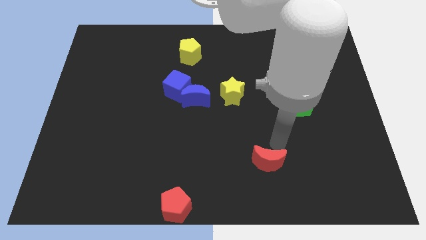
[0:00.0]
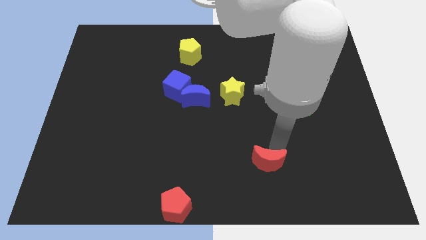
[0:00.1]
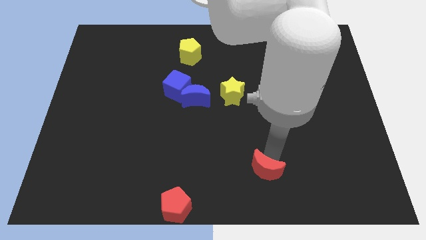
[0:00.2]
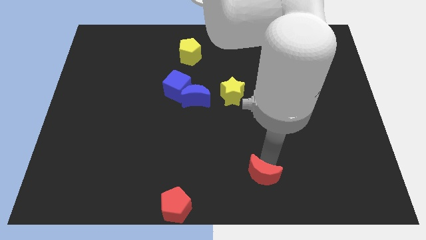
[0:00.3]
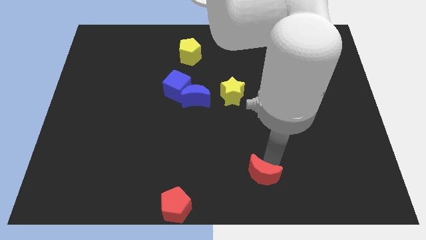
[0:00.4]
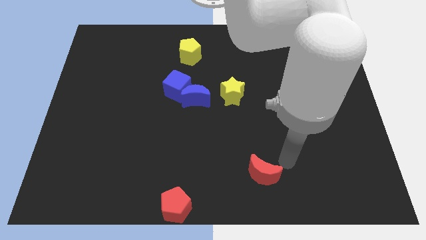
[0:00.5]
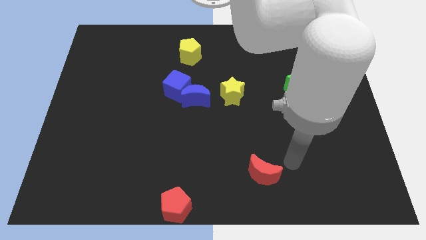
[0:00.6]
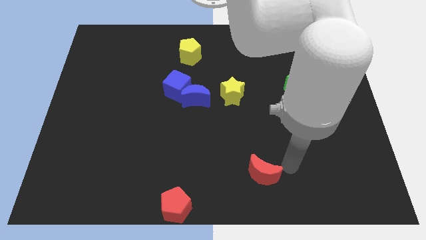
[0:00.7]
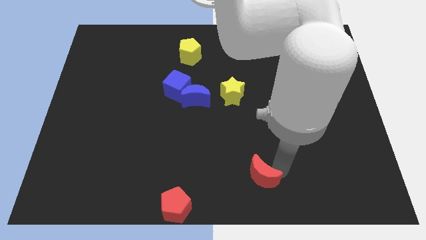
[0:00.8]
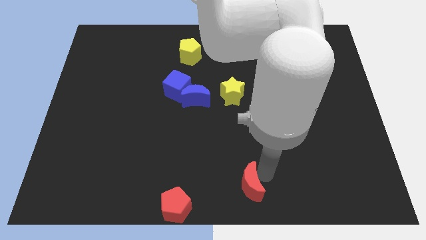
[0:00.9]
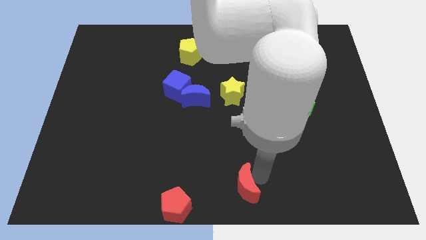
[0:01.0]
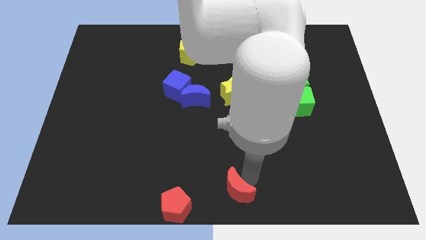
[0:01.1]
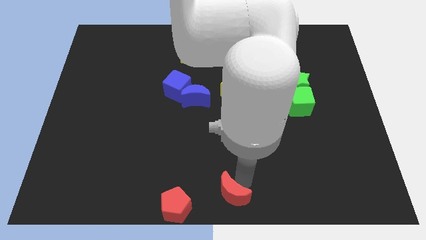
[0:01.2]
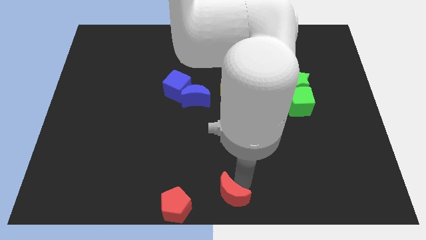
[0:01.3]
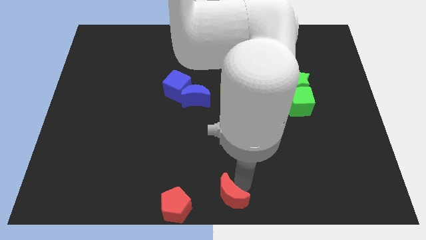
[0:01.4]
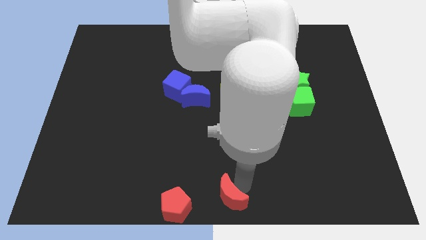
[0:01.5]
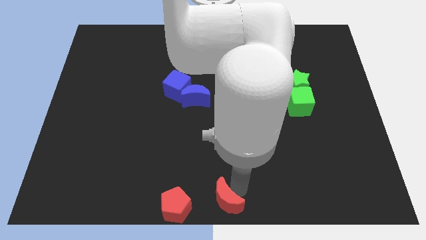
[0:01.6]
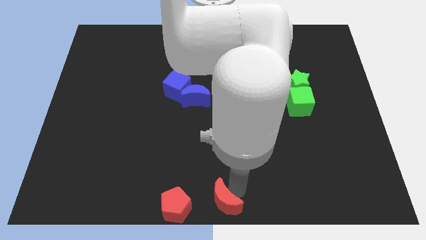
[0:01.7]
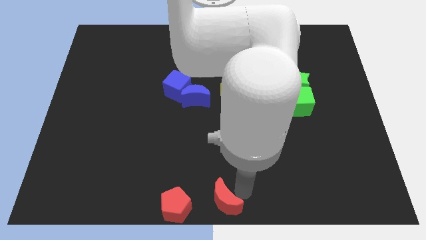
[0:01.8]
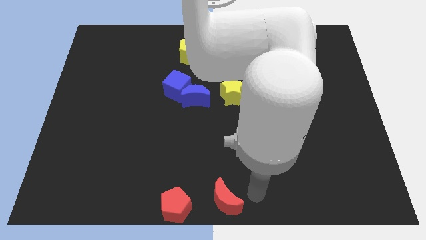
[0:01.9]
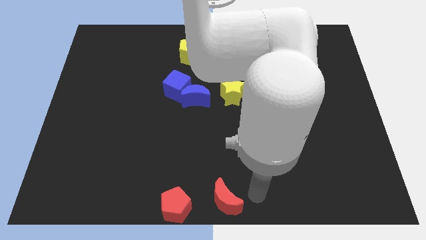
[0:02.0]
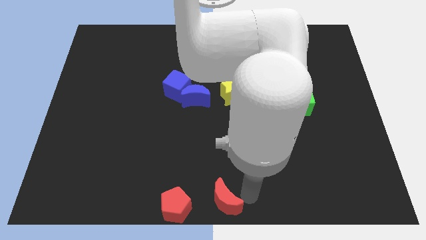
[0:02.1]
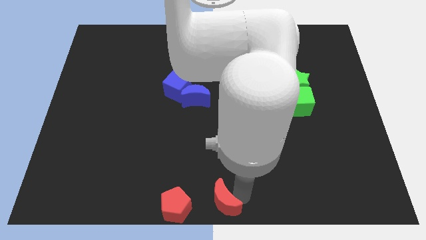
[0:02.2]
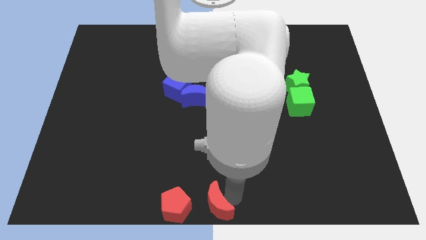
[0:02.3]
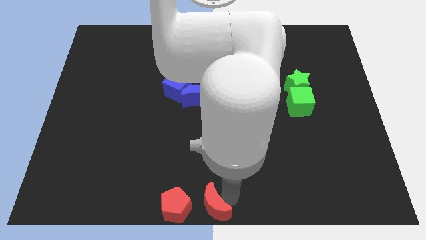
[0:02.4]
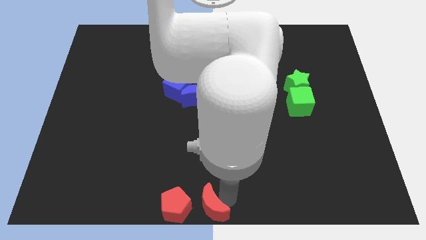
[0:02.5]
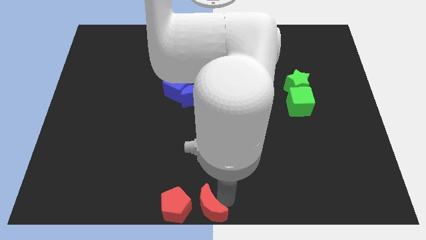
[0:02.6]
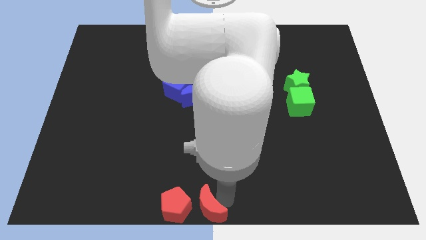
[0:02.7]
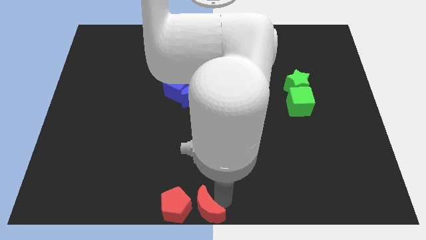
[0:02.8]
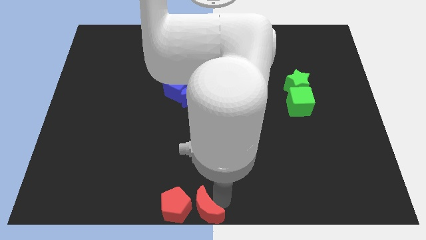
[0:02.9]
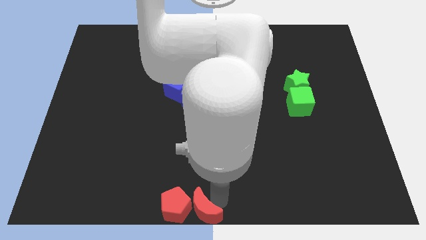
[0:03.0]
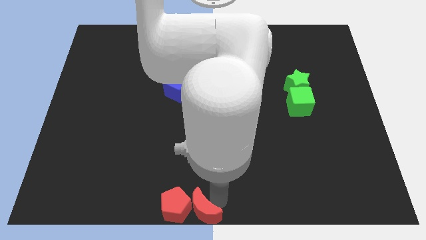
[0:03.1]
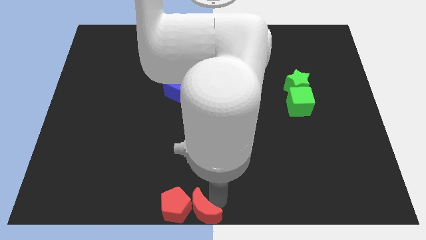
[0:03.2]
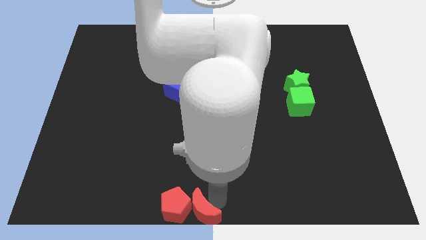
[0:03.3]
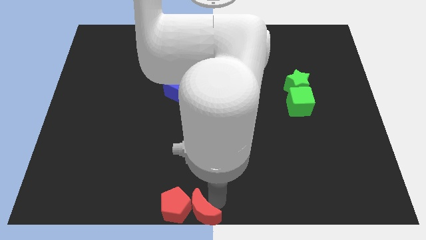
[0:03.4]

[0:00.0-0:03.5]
move the red moon into the red pentagon at the bottom

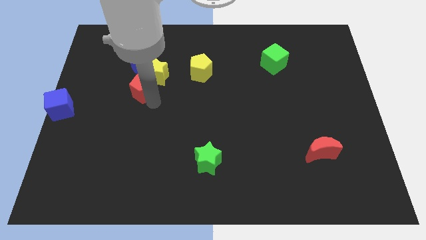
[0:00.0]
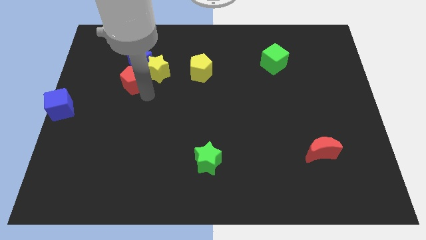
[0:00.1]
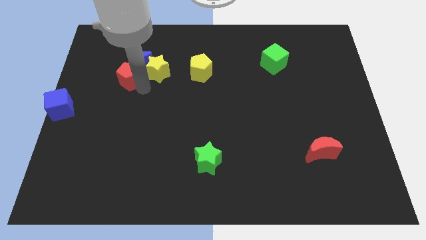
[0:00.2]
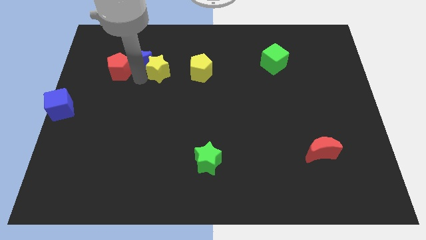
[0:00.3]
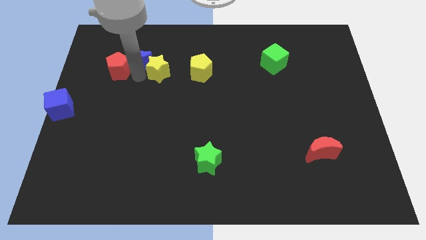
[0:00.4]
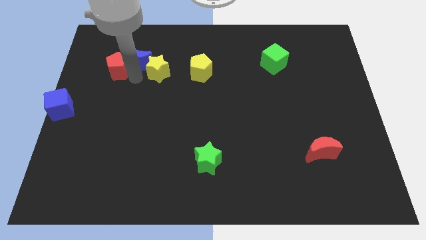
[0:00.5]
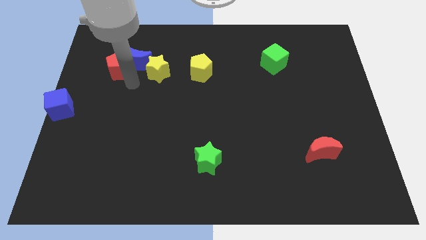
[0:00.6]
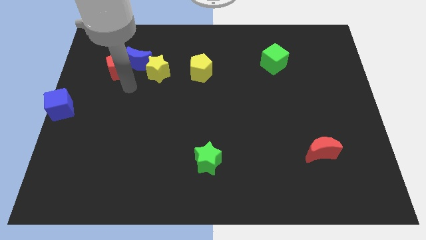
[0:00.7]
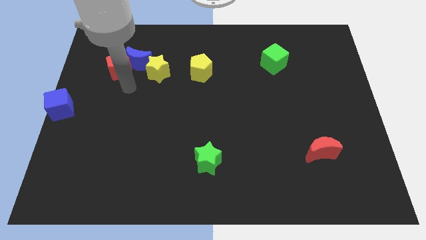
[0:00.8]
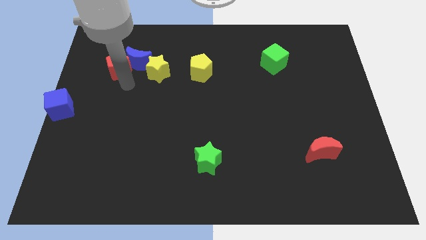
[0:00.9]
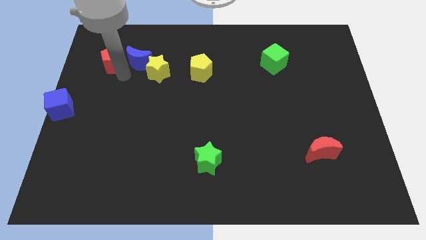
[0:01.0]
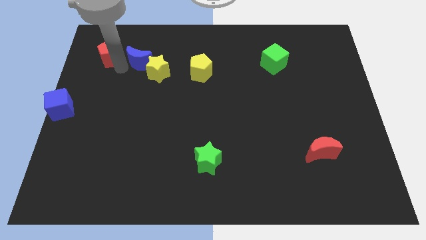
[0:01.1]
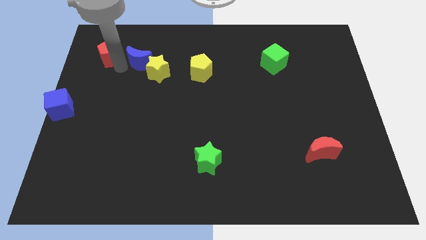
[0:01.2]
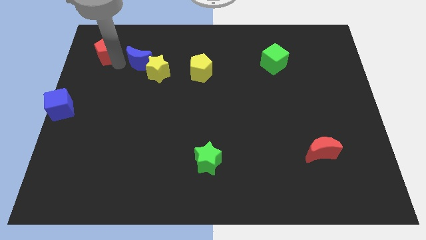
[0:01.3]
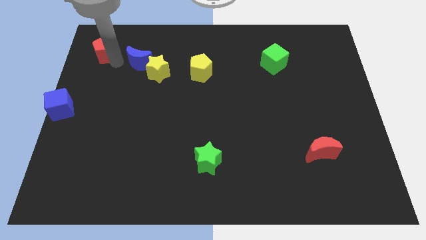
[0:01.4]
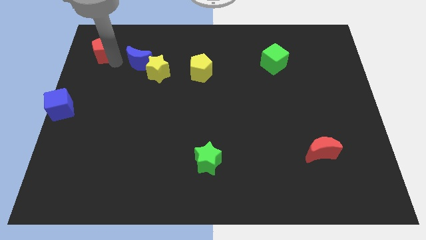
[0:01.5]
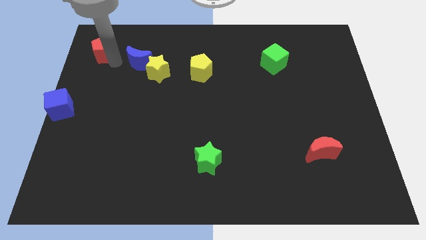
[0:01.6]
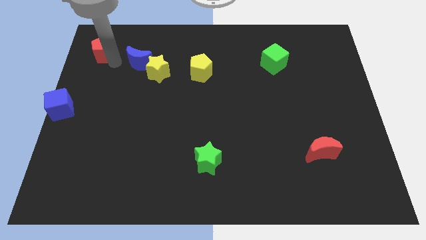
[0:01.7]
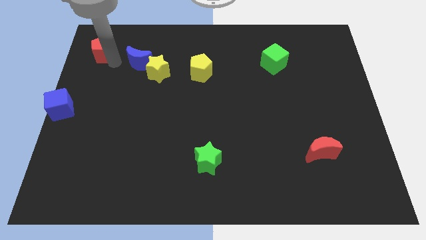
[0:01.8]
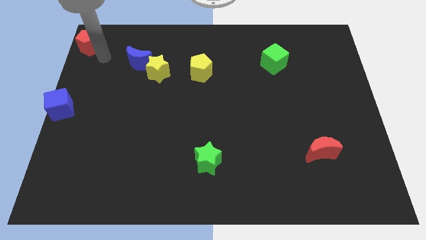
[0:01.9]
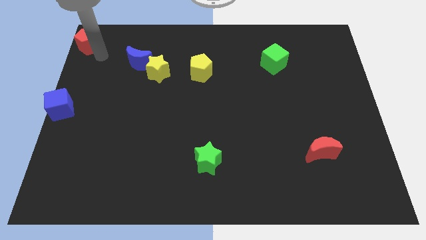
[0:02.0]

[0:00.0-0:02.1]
drag the red pentagon towards top left

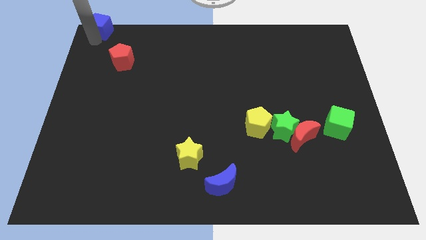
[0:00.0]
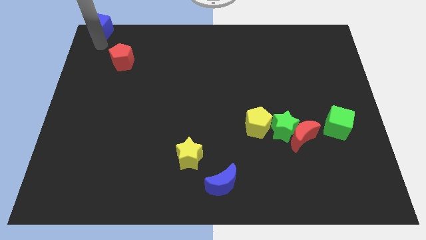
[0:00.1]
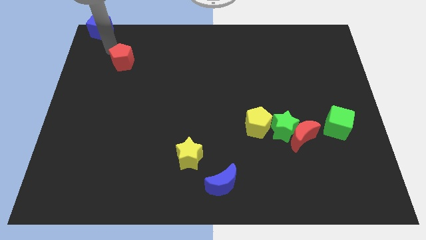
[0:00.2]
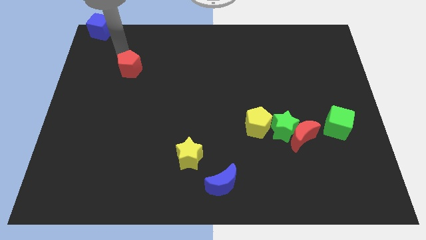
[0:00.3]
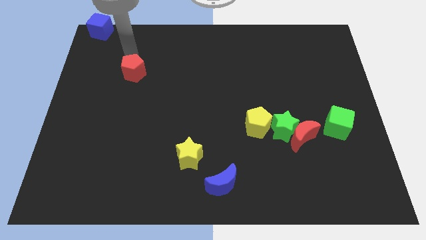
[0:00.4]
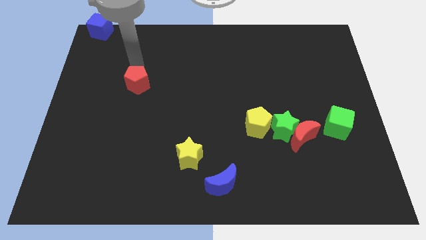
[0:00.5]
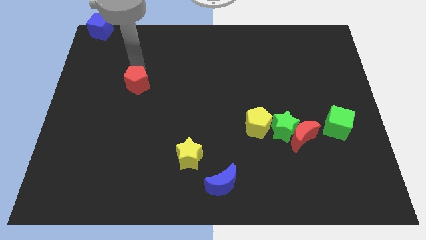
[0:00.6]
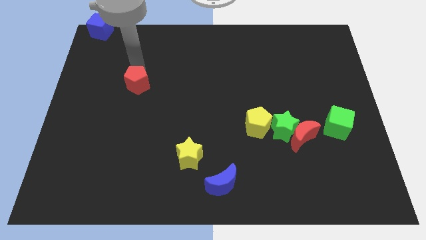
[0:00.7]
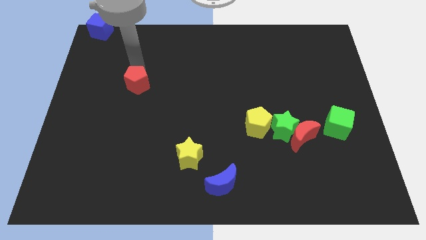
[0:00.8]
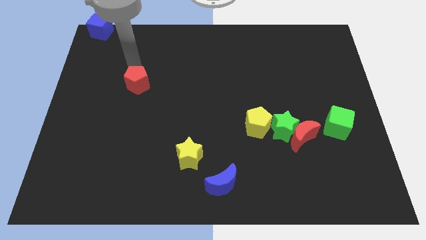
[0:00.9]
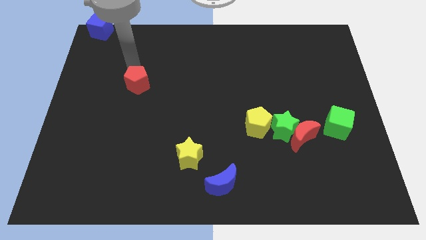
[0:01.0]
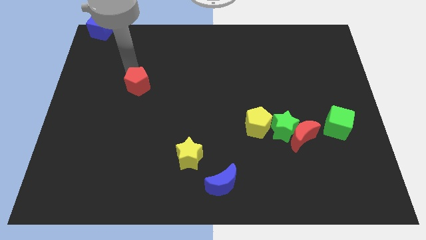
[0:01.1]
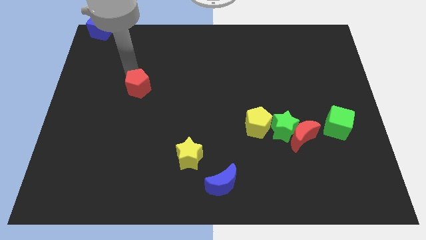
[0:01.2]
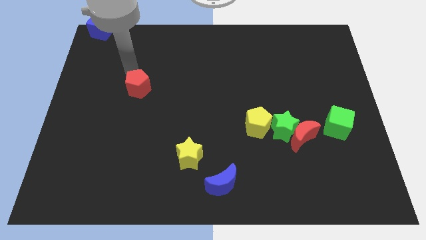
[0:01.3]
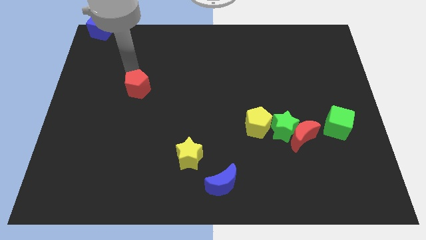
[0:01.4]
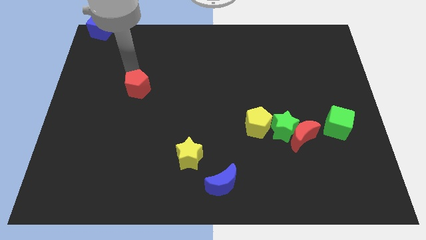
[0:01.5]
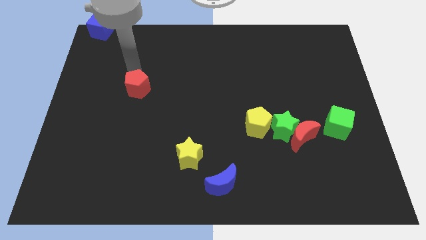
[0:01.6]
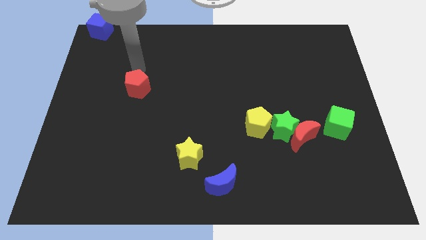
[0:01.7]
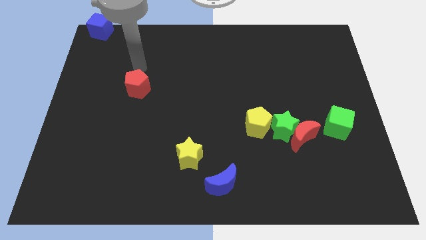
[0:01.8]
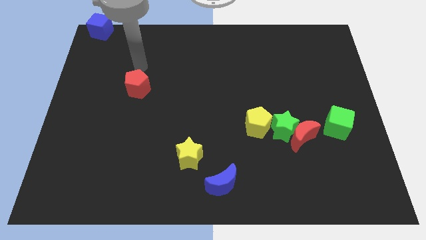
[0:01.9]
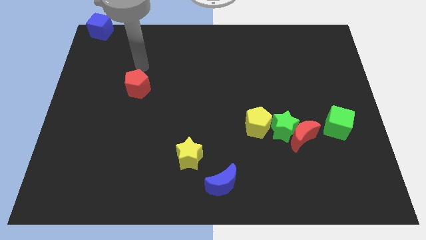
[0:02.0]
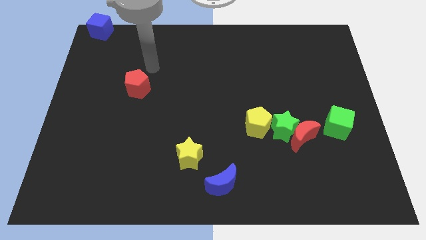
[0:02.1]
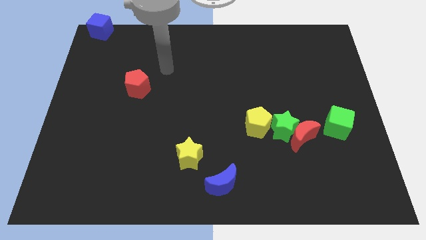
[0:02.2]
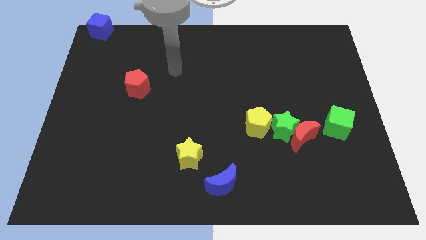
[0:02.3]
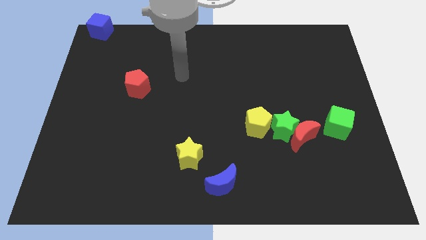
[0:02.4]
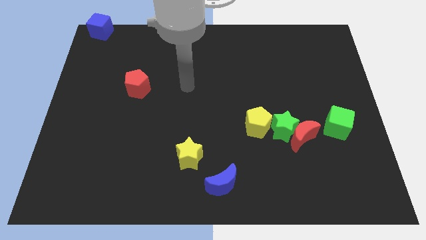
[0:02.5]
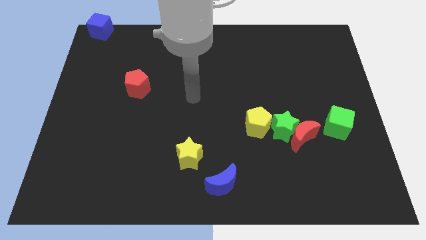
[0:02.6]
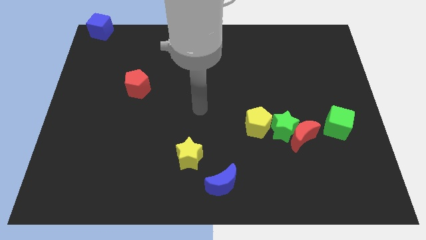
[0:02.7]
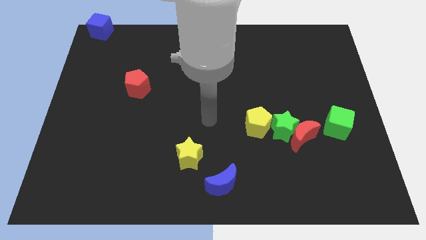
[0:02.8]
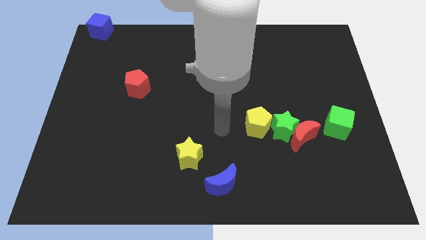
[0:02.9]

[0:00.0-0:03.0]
slightly push the red pentagon diagonally down

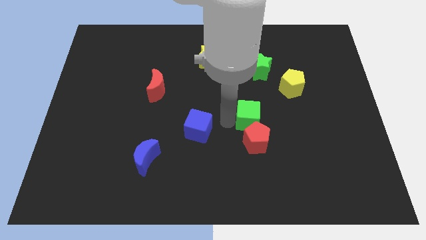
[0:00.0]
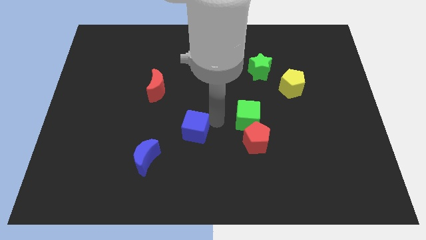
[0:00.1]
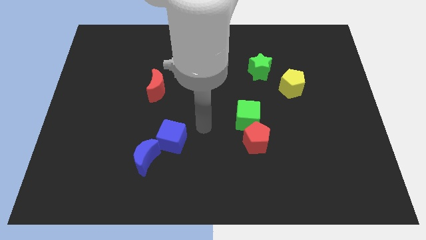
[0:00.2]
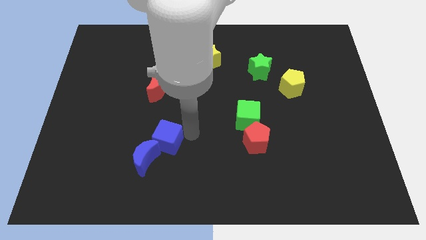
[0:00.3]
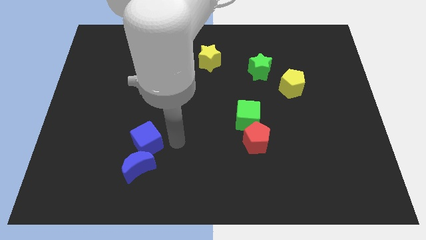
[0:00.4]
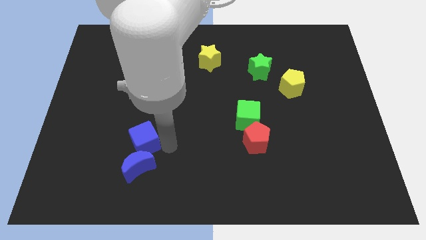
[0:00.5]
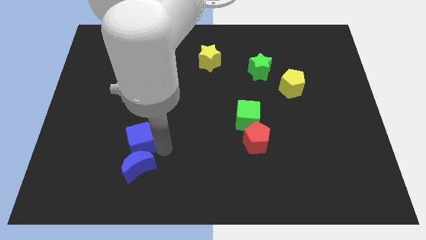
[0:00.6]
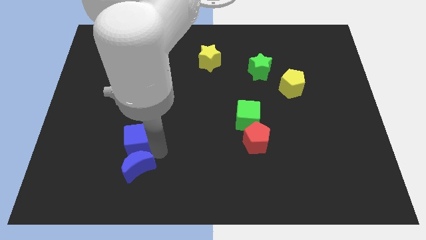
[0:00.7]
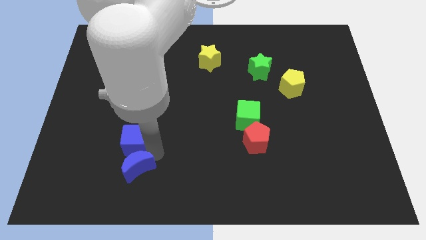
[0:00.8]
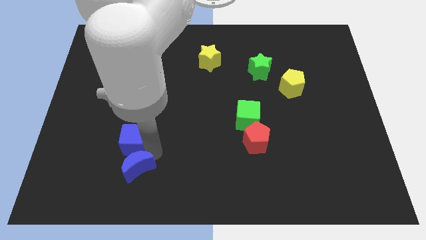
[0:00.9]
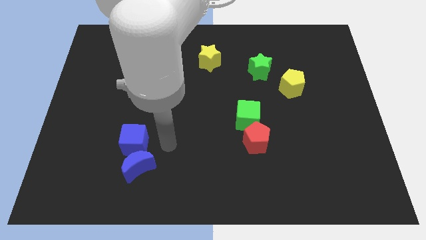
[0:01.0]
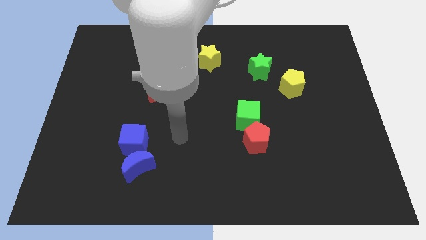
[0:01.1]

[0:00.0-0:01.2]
push the blue cube into the blue moon
